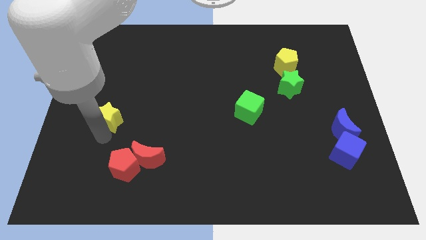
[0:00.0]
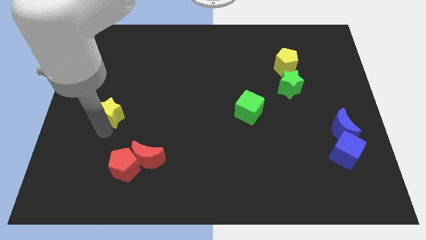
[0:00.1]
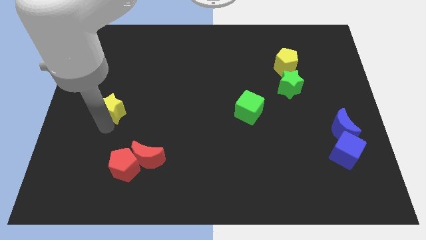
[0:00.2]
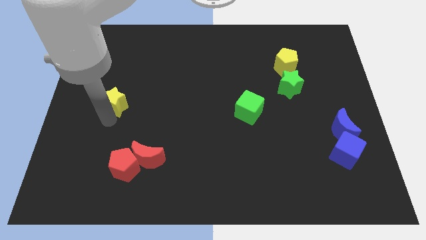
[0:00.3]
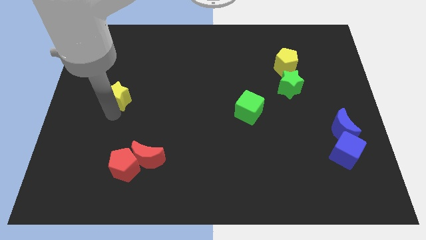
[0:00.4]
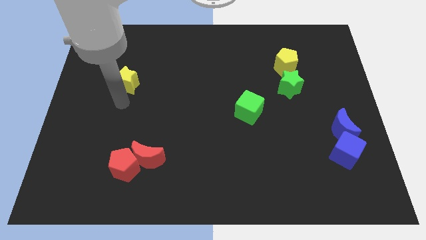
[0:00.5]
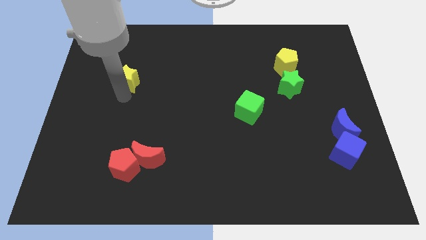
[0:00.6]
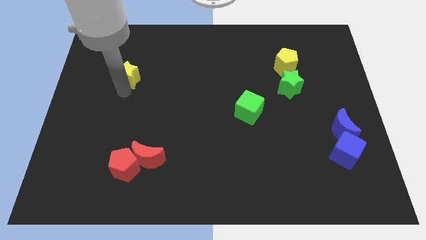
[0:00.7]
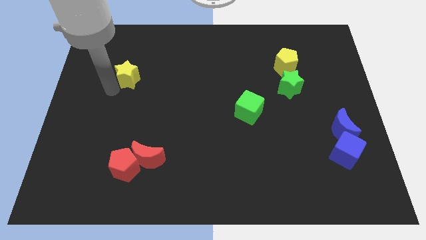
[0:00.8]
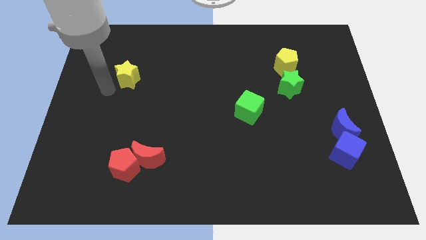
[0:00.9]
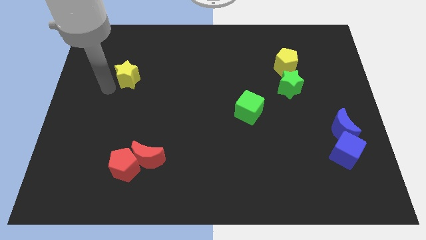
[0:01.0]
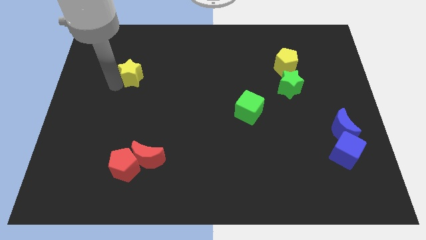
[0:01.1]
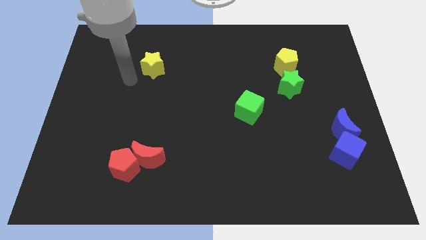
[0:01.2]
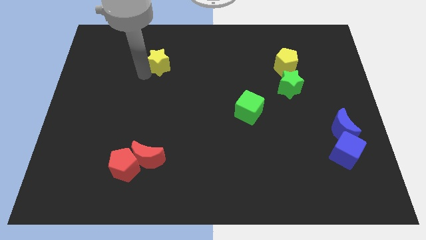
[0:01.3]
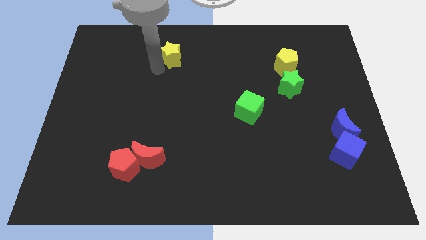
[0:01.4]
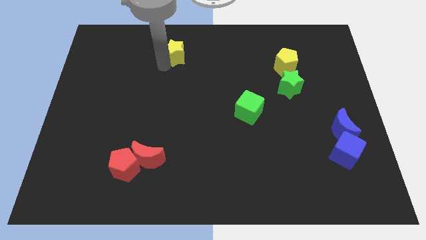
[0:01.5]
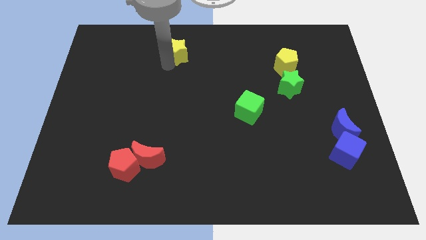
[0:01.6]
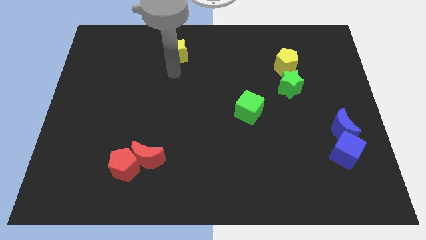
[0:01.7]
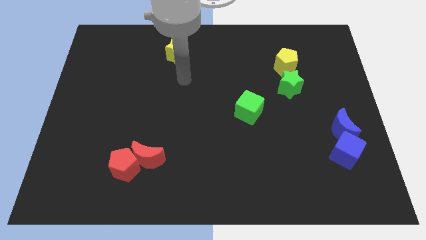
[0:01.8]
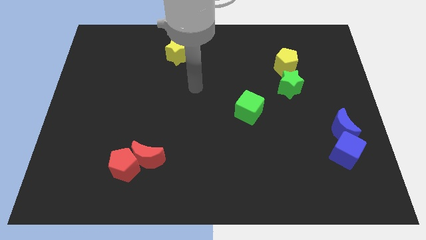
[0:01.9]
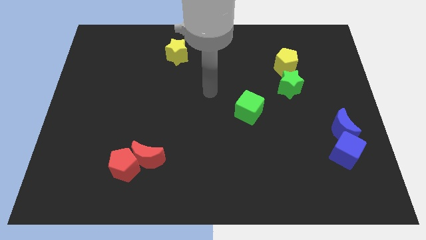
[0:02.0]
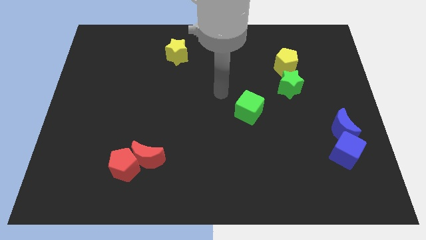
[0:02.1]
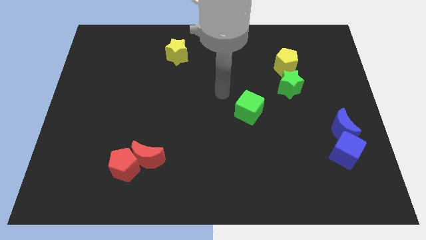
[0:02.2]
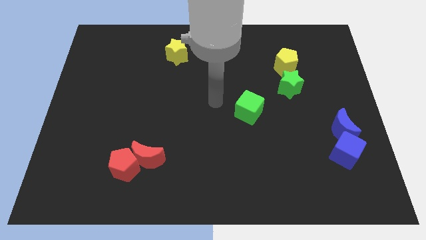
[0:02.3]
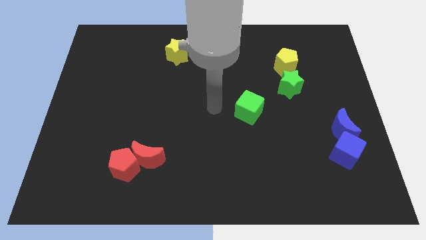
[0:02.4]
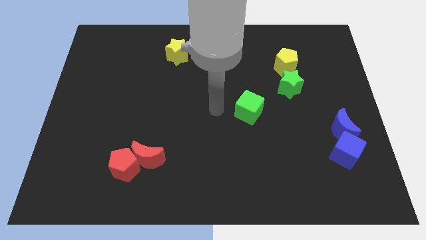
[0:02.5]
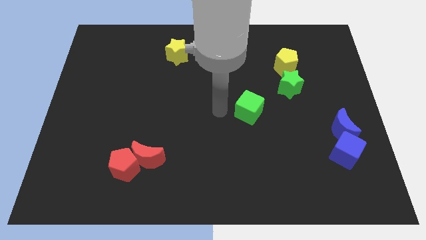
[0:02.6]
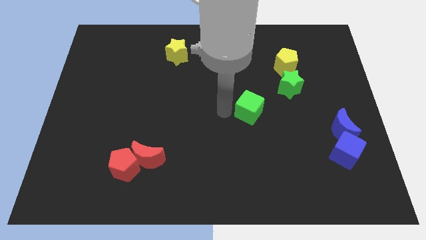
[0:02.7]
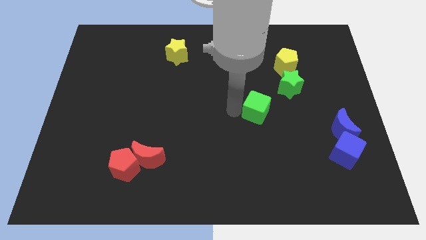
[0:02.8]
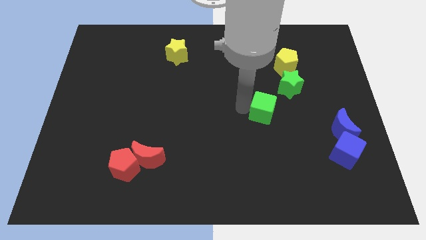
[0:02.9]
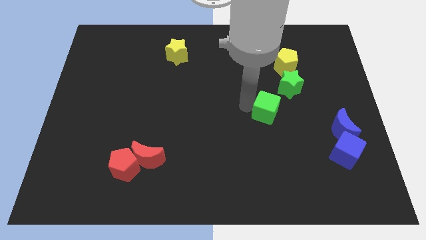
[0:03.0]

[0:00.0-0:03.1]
drag the yellow star towards the top center

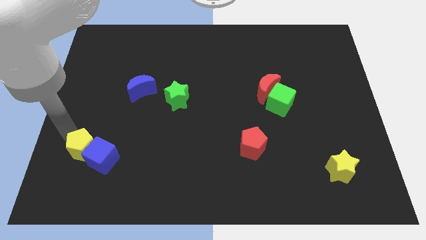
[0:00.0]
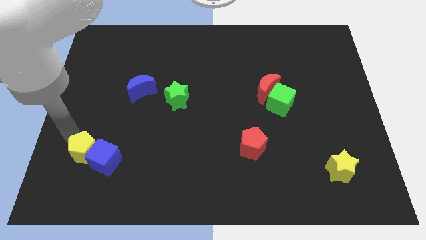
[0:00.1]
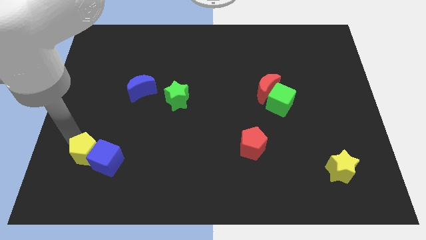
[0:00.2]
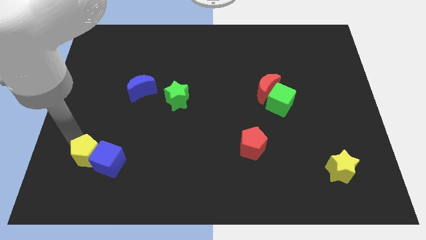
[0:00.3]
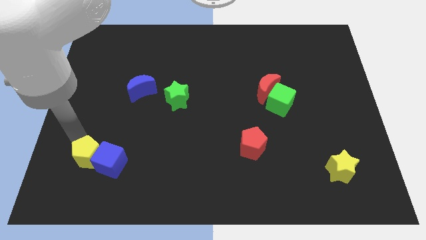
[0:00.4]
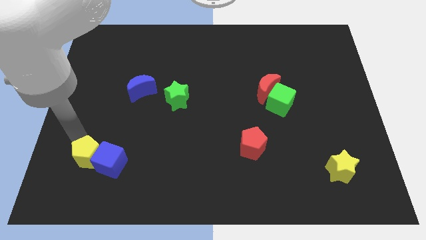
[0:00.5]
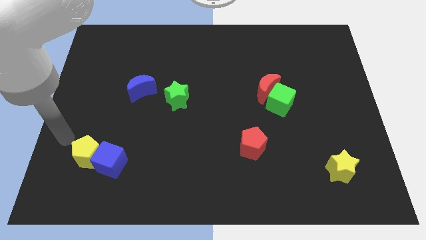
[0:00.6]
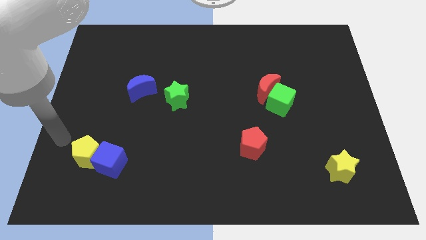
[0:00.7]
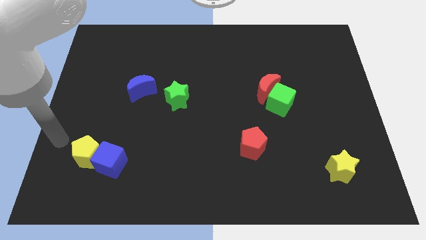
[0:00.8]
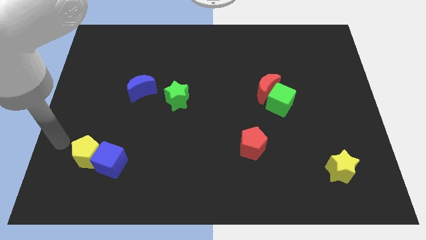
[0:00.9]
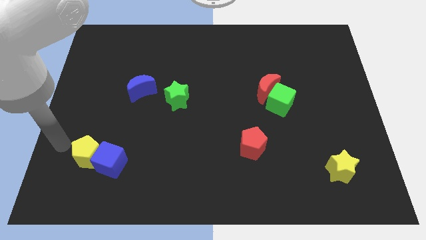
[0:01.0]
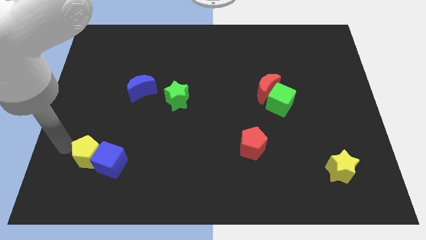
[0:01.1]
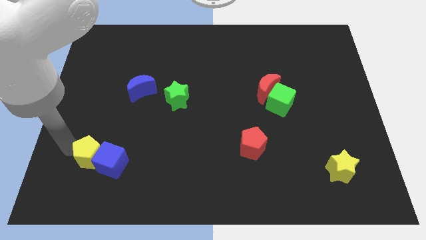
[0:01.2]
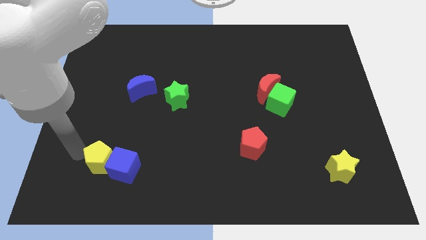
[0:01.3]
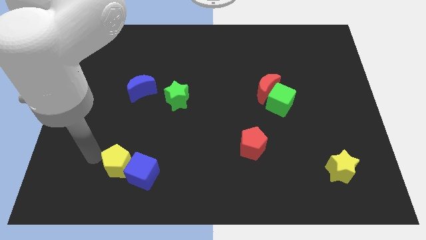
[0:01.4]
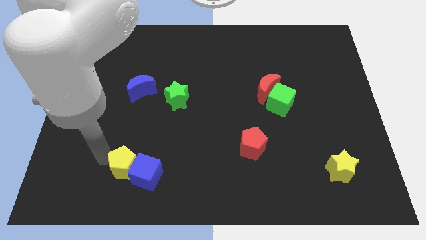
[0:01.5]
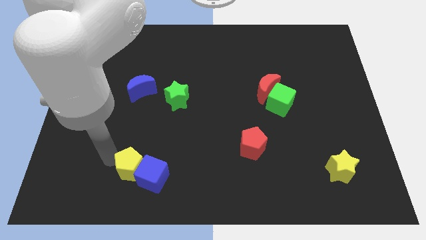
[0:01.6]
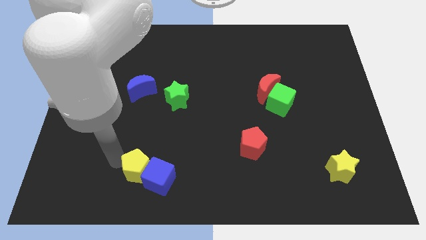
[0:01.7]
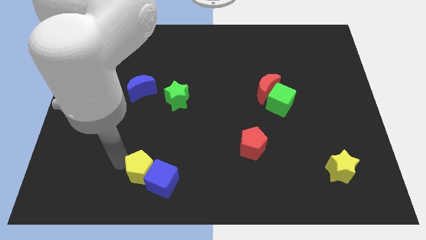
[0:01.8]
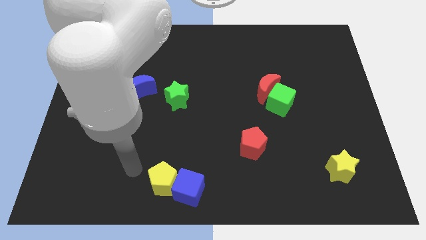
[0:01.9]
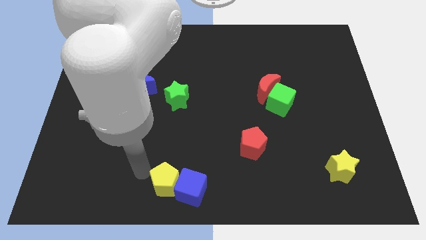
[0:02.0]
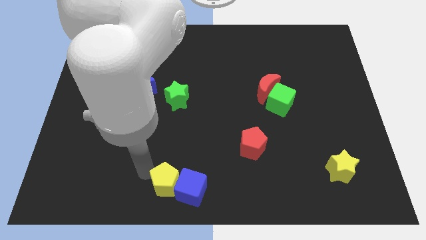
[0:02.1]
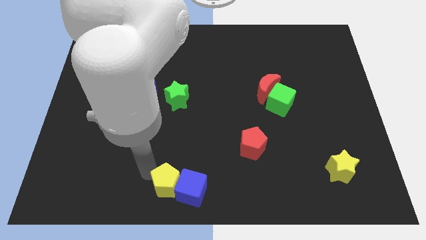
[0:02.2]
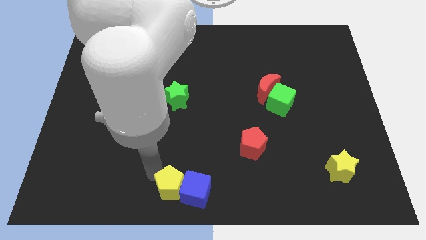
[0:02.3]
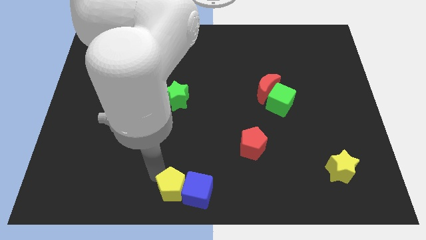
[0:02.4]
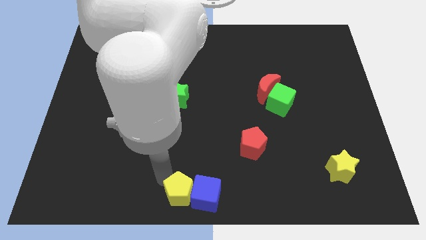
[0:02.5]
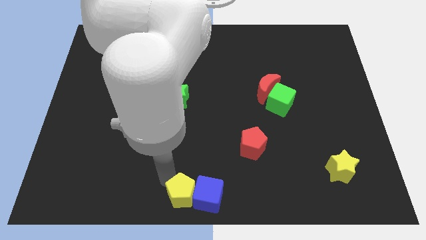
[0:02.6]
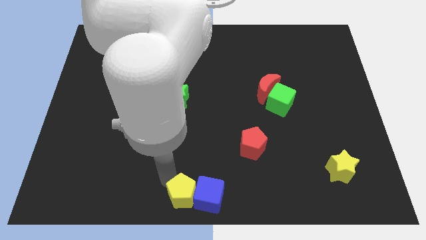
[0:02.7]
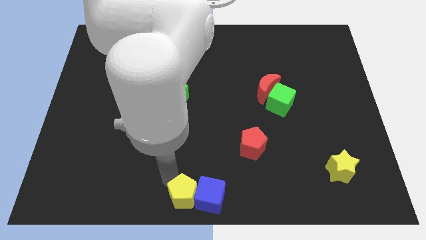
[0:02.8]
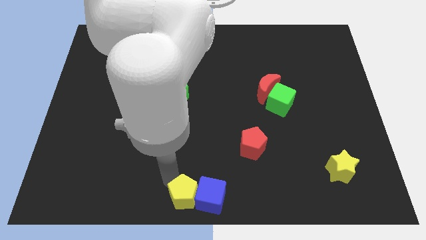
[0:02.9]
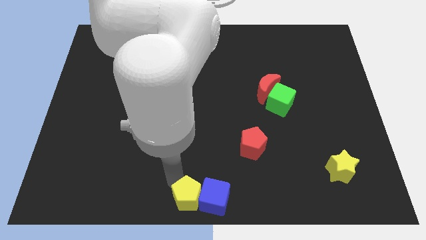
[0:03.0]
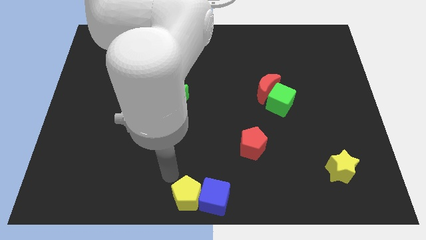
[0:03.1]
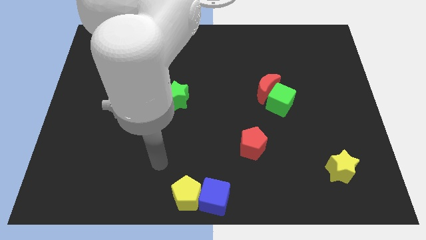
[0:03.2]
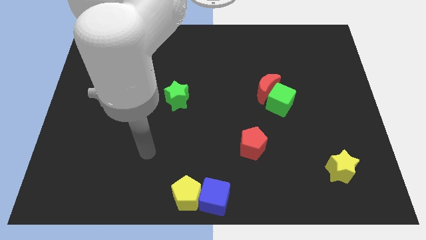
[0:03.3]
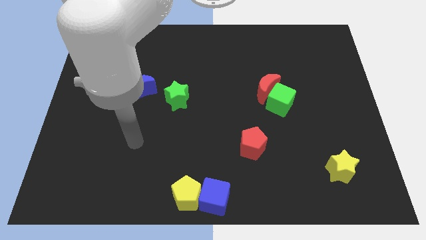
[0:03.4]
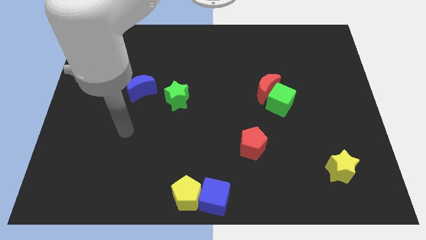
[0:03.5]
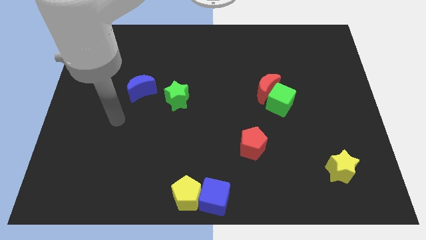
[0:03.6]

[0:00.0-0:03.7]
push the yellow pentagon and blue cube to the bottom center of the board

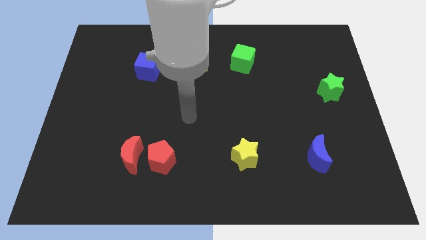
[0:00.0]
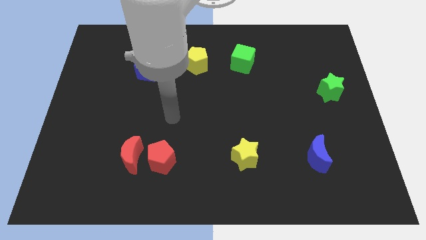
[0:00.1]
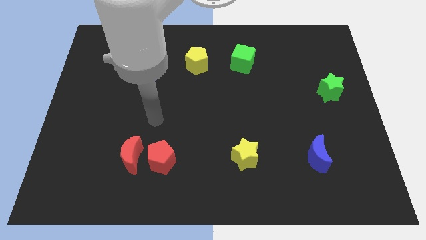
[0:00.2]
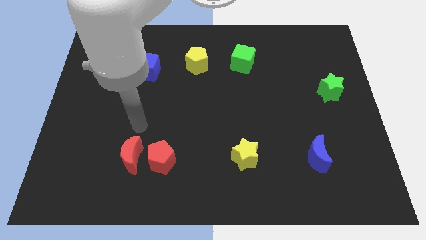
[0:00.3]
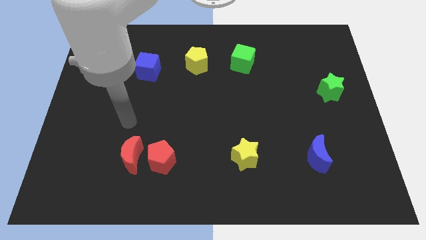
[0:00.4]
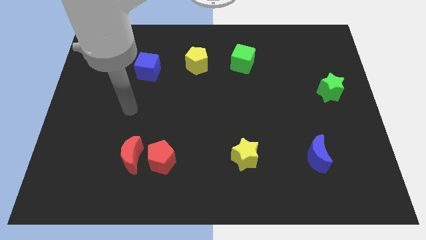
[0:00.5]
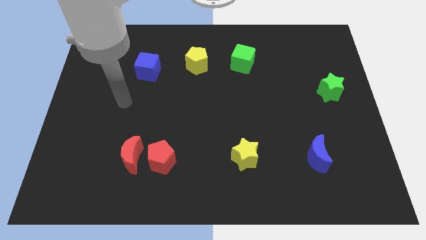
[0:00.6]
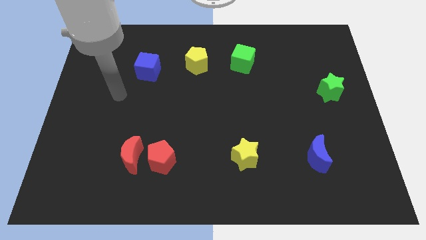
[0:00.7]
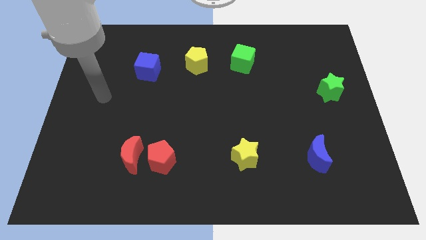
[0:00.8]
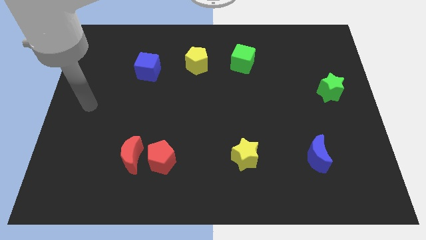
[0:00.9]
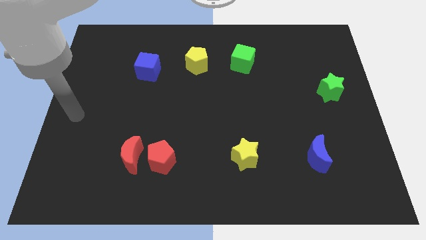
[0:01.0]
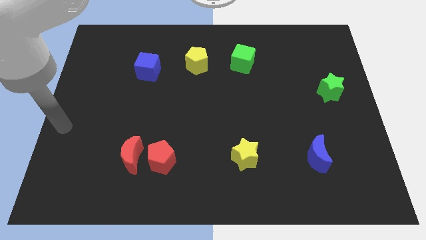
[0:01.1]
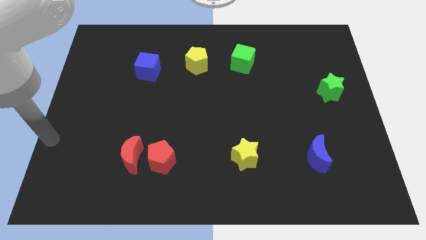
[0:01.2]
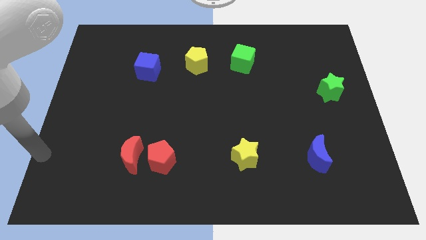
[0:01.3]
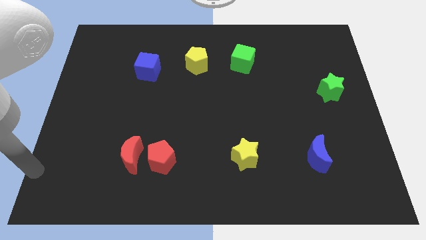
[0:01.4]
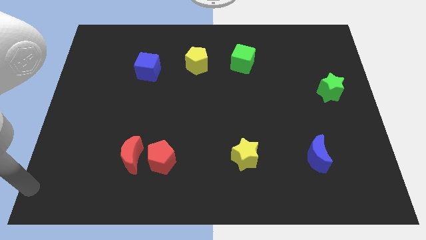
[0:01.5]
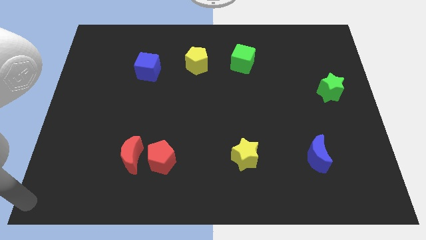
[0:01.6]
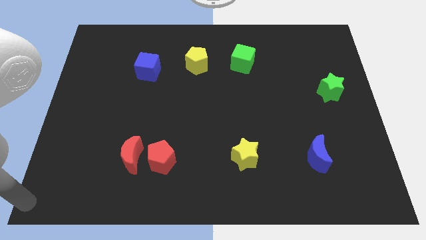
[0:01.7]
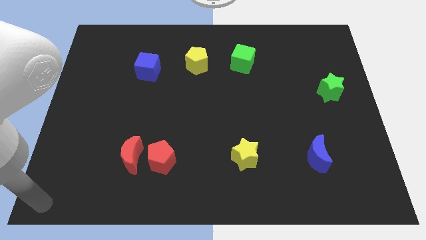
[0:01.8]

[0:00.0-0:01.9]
point your hand at the bottom left corner

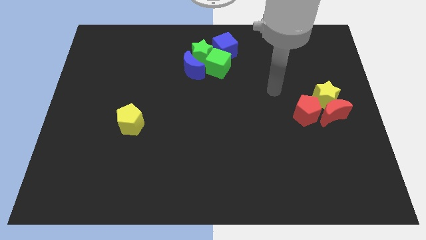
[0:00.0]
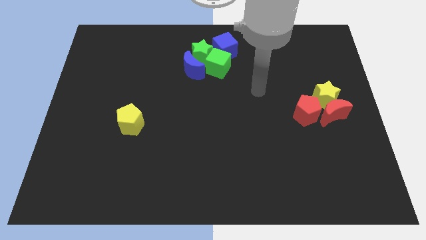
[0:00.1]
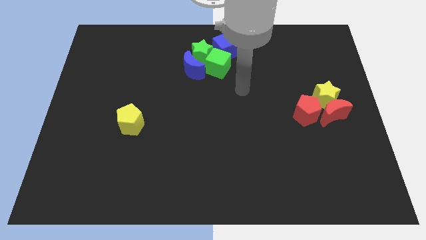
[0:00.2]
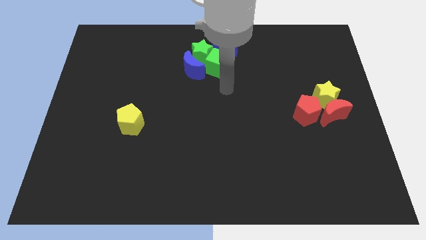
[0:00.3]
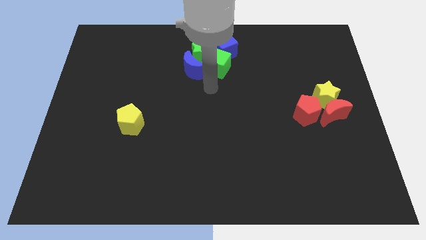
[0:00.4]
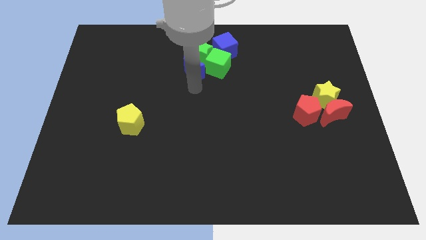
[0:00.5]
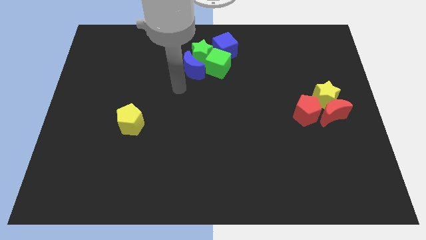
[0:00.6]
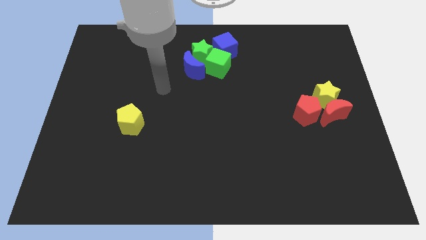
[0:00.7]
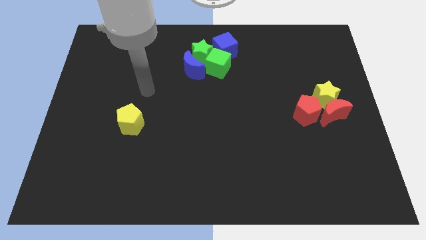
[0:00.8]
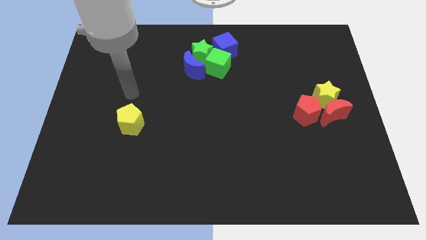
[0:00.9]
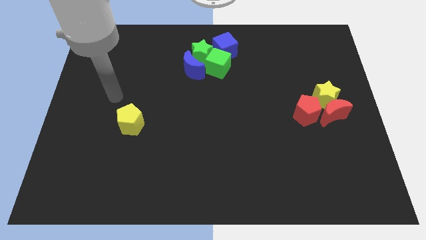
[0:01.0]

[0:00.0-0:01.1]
move your arm to the top left of yellow pentagon
